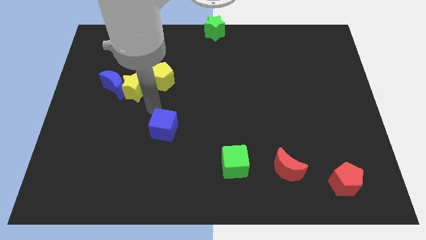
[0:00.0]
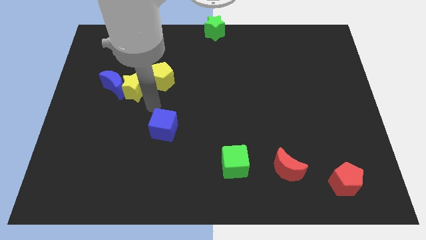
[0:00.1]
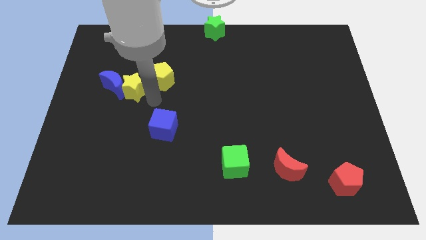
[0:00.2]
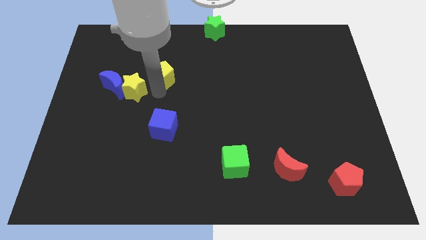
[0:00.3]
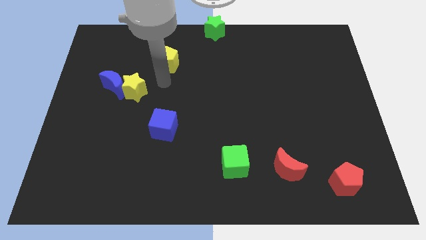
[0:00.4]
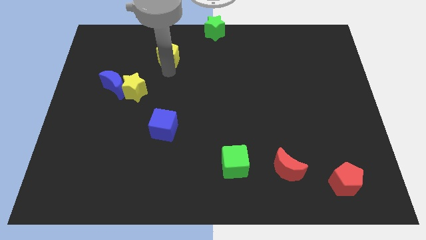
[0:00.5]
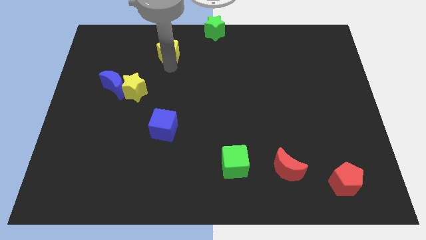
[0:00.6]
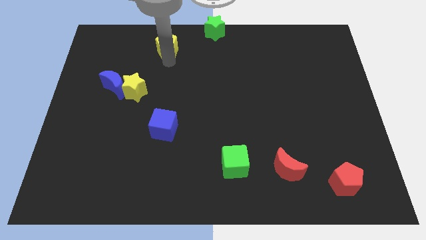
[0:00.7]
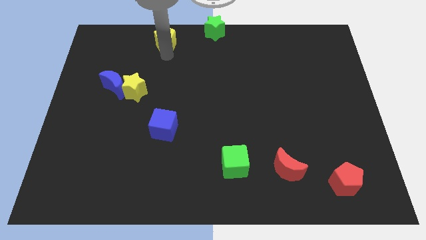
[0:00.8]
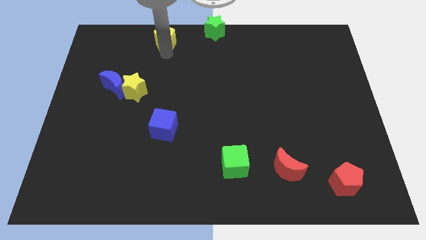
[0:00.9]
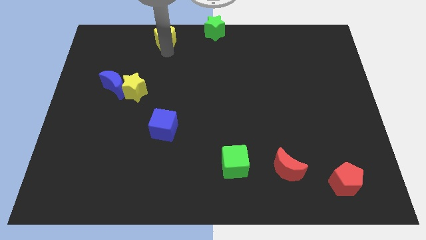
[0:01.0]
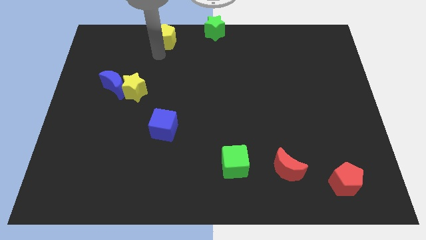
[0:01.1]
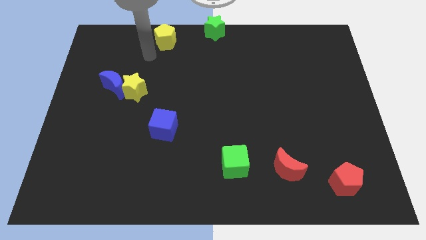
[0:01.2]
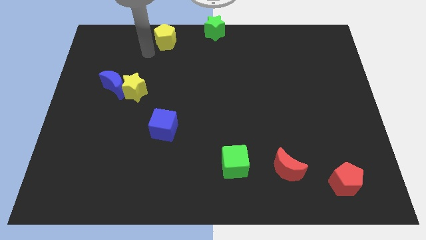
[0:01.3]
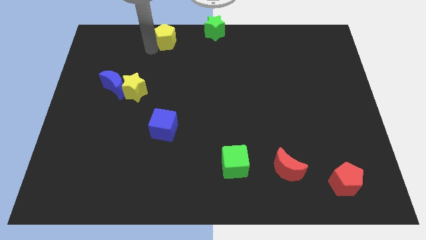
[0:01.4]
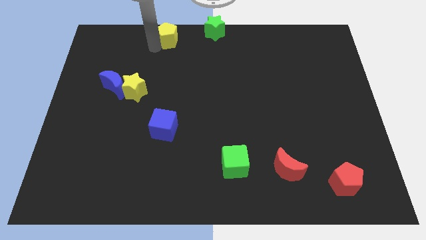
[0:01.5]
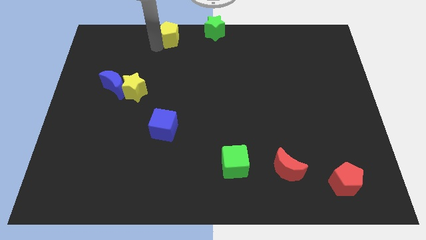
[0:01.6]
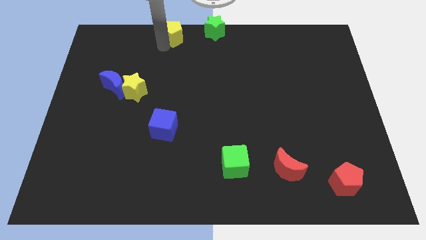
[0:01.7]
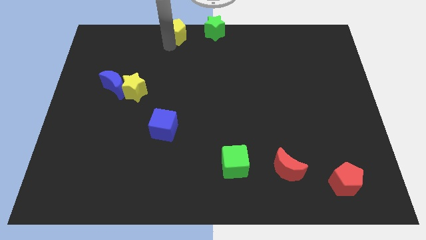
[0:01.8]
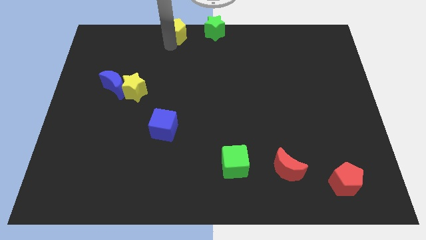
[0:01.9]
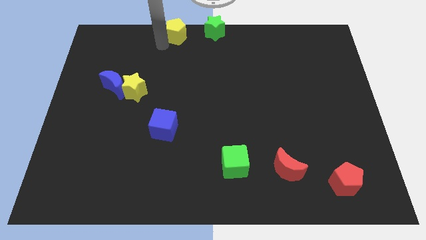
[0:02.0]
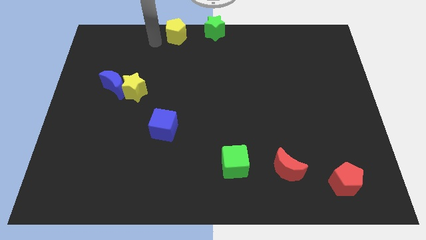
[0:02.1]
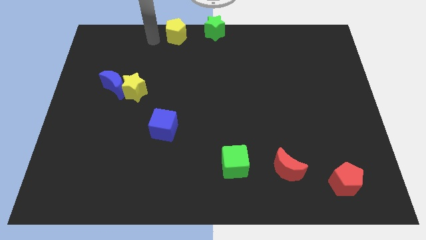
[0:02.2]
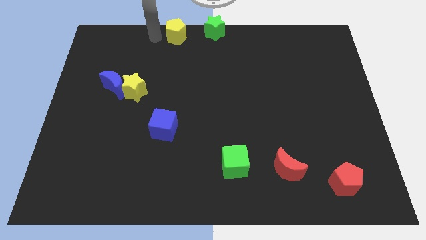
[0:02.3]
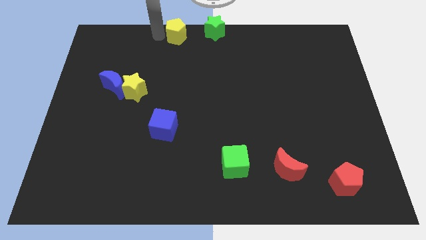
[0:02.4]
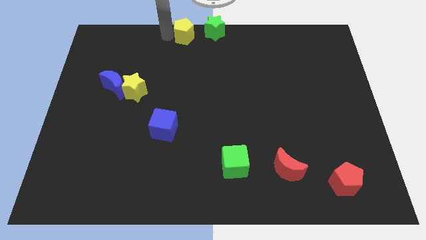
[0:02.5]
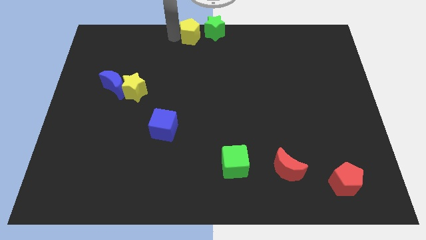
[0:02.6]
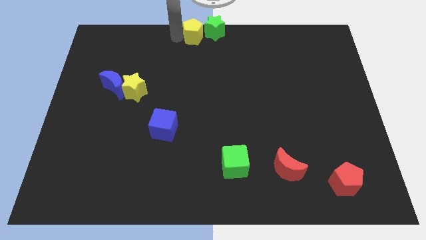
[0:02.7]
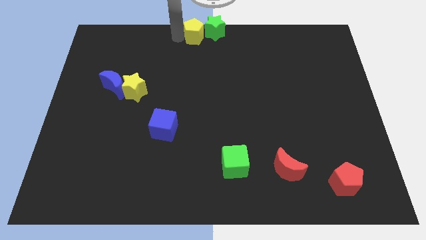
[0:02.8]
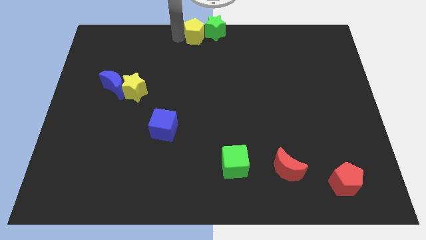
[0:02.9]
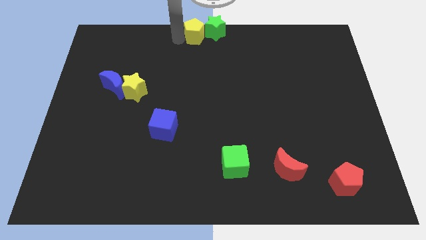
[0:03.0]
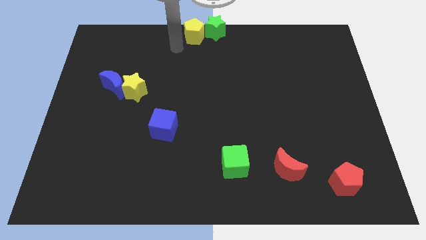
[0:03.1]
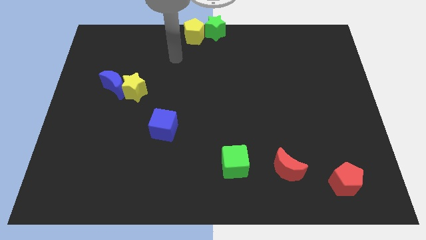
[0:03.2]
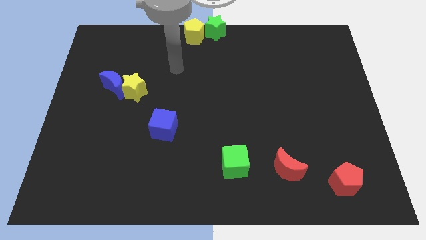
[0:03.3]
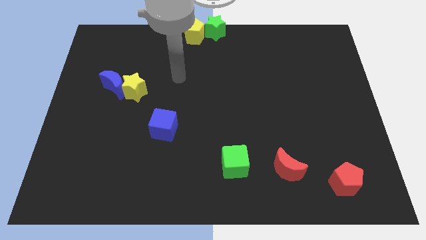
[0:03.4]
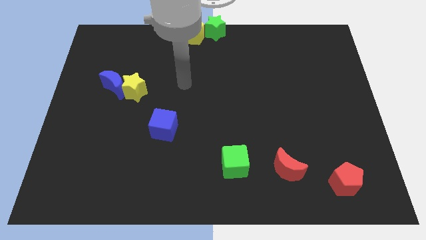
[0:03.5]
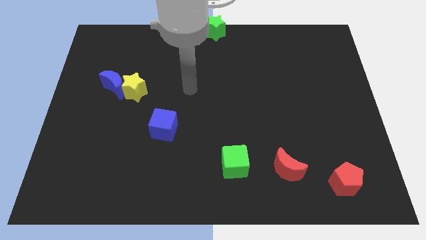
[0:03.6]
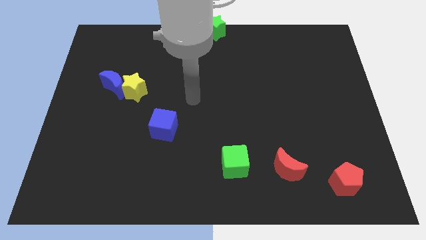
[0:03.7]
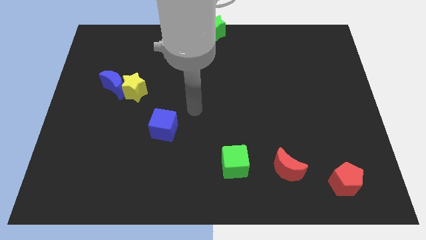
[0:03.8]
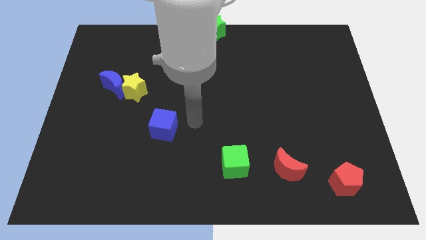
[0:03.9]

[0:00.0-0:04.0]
move the yellow pentagon left to the green star

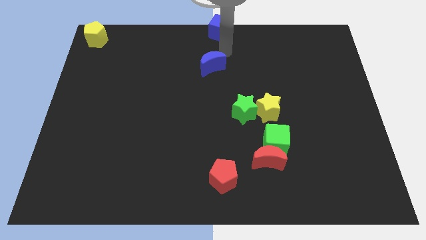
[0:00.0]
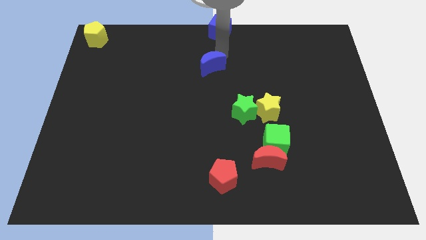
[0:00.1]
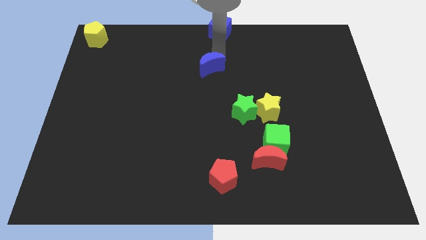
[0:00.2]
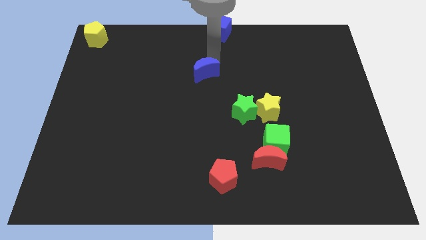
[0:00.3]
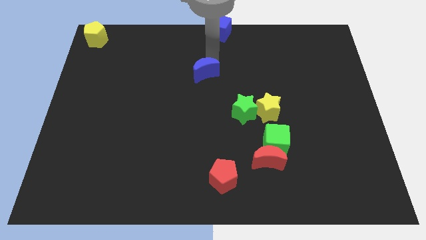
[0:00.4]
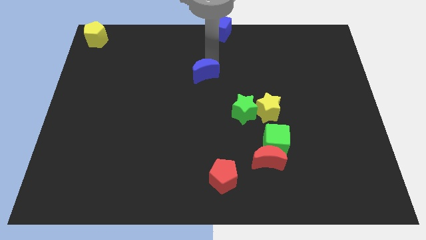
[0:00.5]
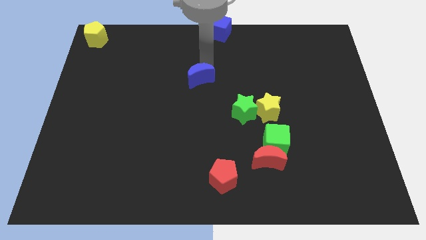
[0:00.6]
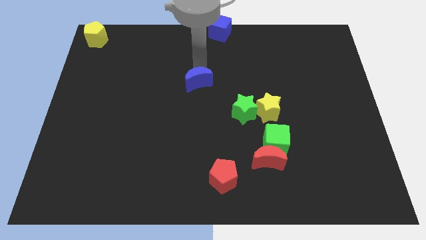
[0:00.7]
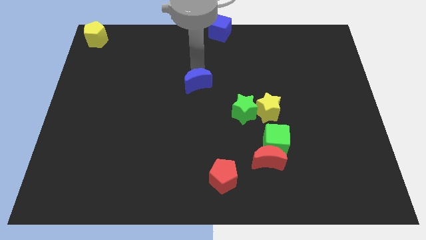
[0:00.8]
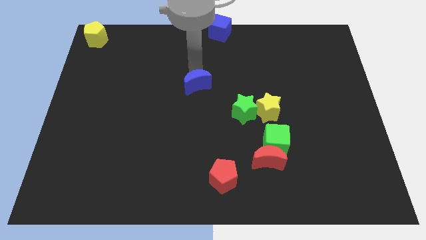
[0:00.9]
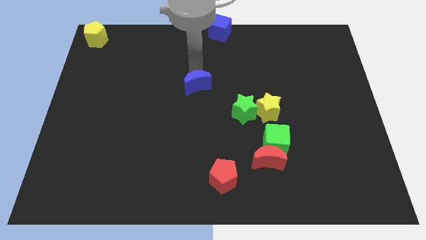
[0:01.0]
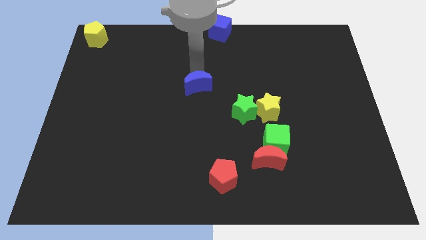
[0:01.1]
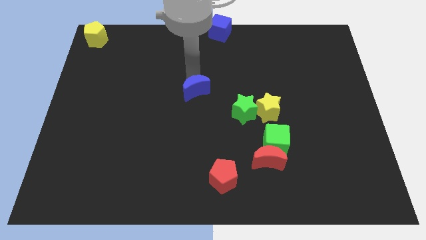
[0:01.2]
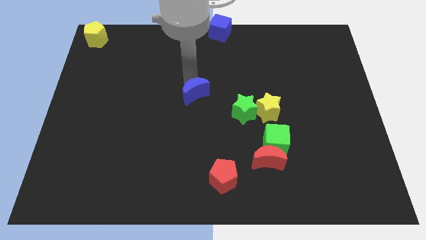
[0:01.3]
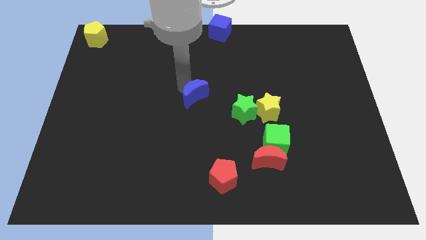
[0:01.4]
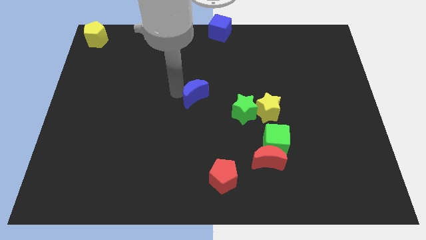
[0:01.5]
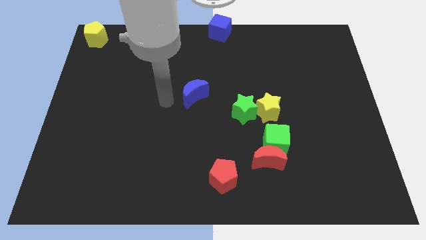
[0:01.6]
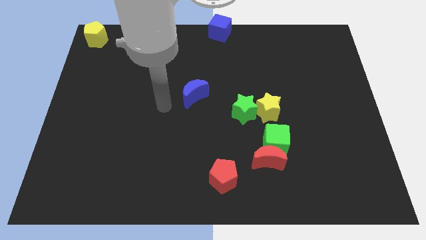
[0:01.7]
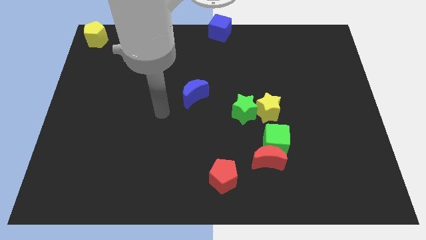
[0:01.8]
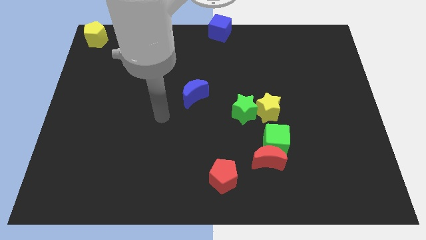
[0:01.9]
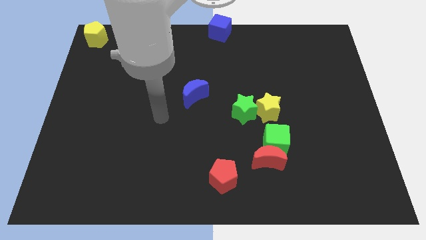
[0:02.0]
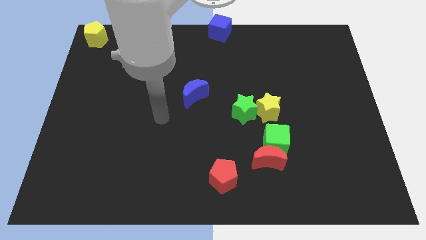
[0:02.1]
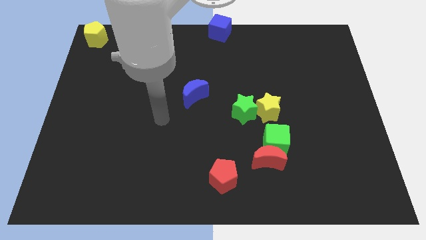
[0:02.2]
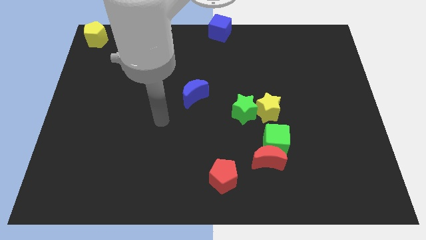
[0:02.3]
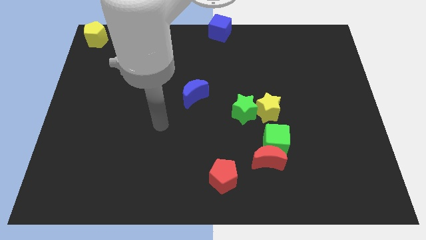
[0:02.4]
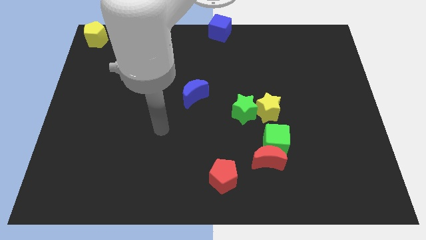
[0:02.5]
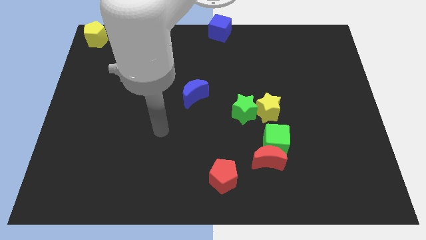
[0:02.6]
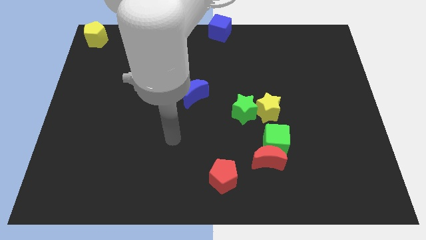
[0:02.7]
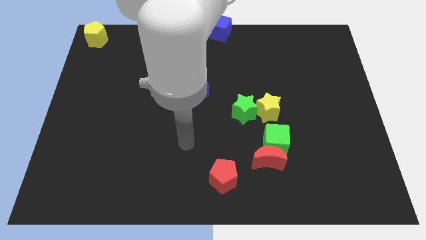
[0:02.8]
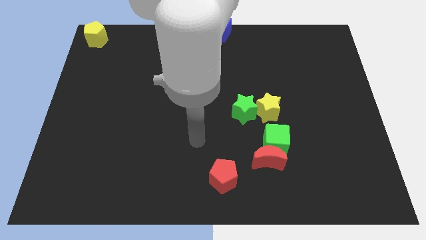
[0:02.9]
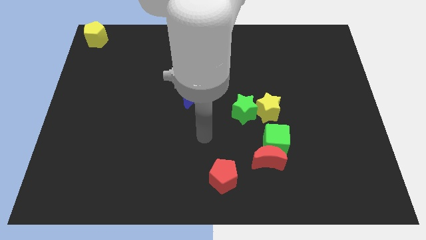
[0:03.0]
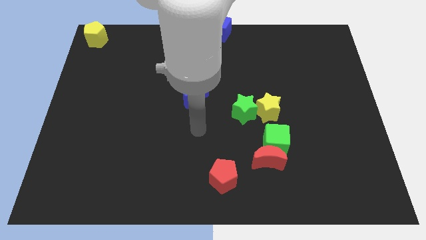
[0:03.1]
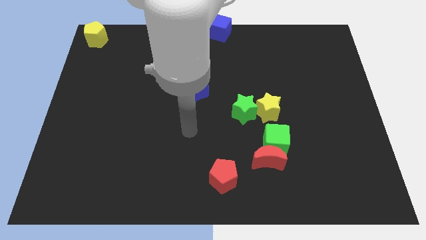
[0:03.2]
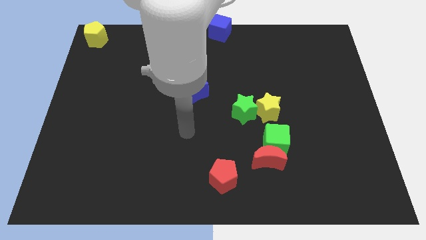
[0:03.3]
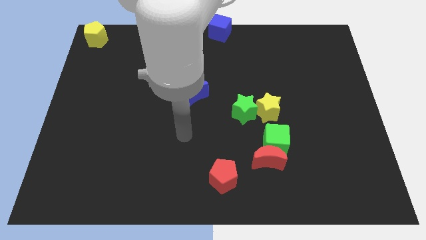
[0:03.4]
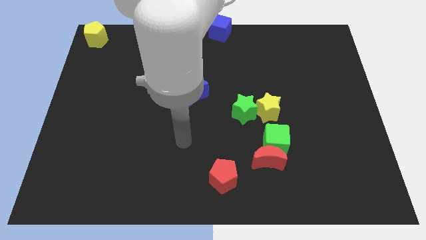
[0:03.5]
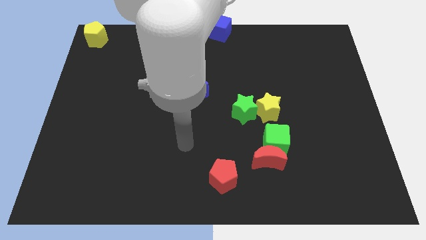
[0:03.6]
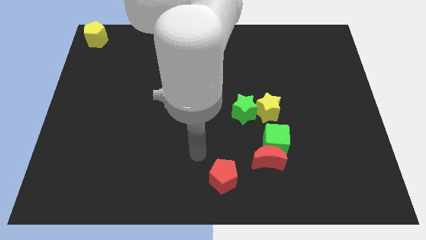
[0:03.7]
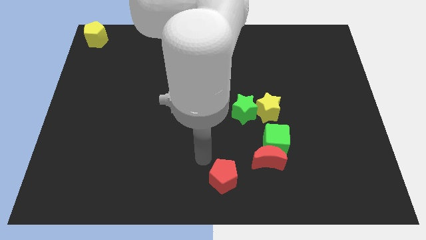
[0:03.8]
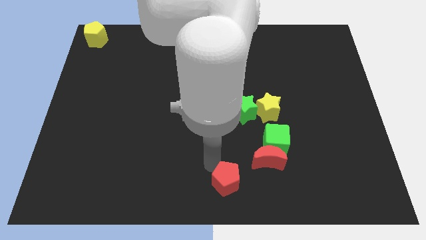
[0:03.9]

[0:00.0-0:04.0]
push the blue crescent to the center of the board

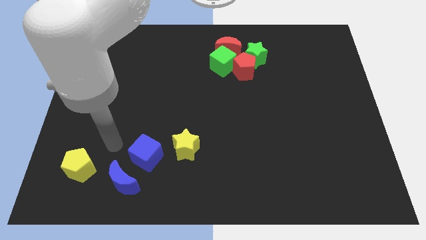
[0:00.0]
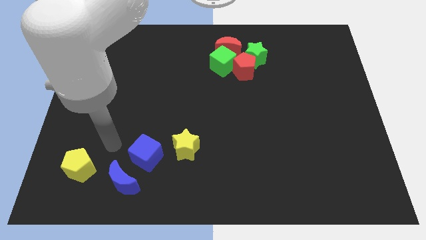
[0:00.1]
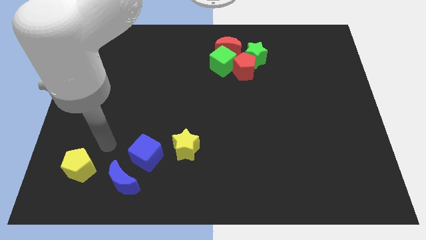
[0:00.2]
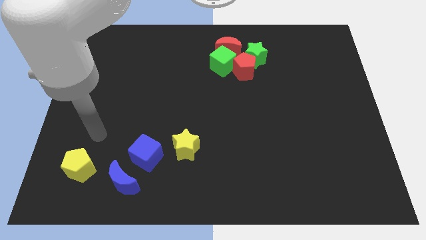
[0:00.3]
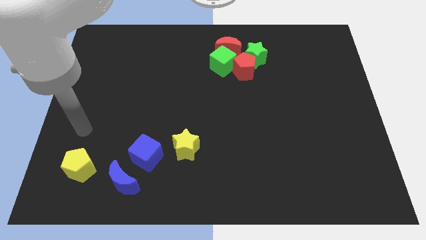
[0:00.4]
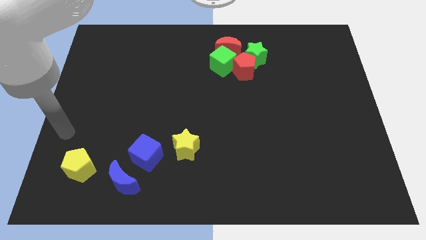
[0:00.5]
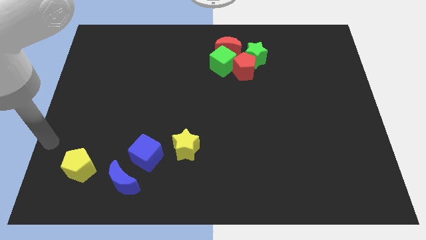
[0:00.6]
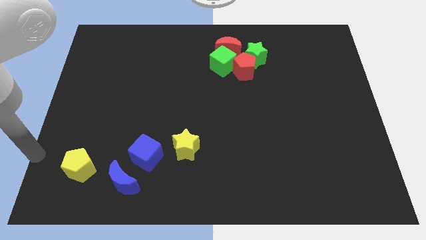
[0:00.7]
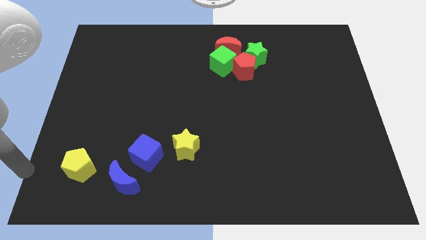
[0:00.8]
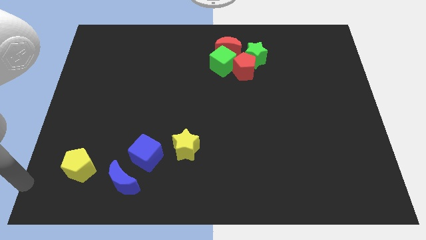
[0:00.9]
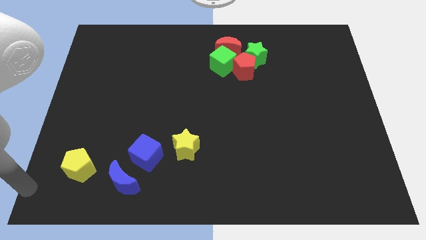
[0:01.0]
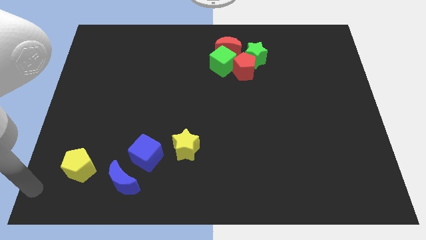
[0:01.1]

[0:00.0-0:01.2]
place your arm to the bottom left
